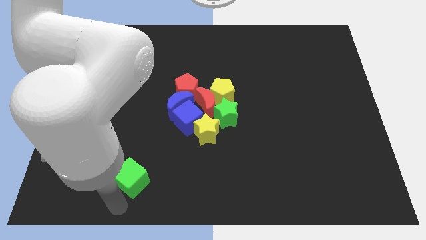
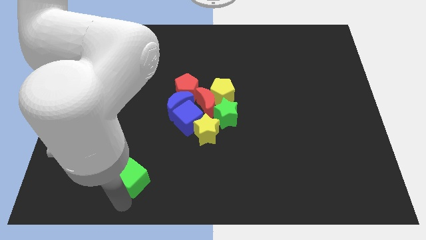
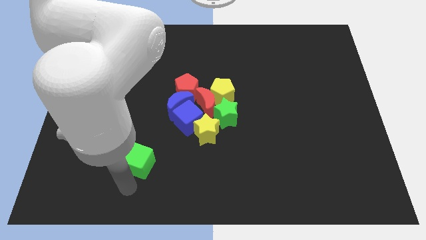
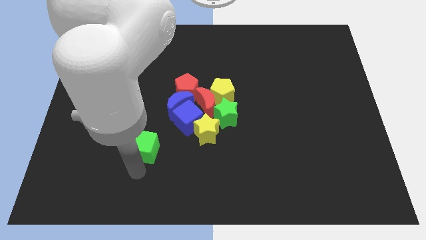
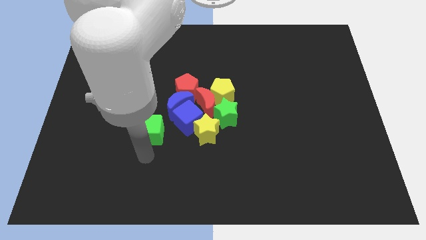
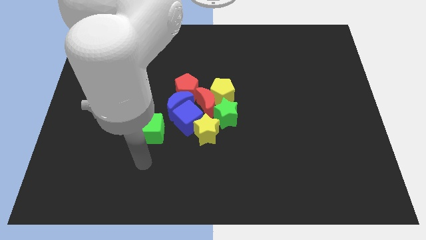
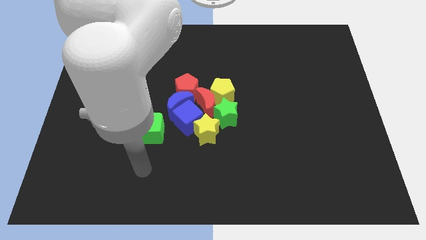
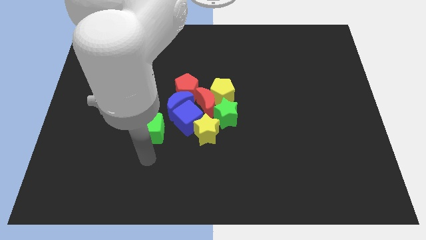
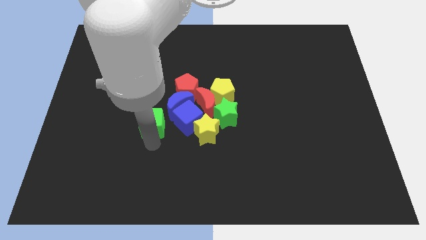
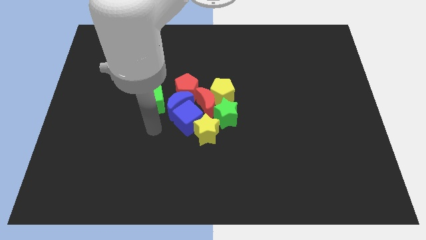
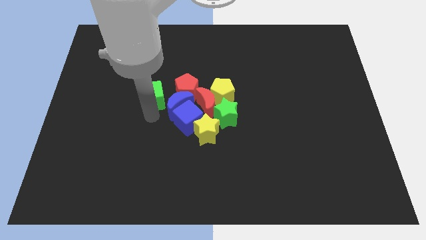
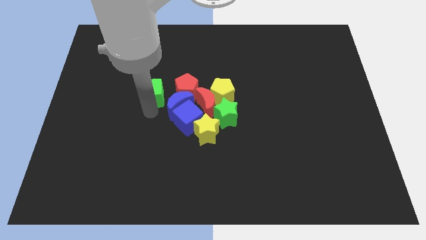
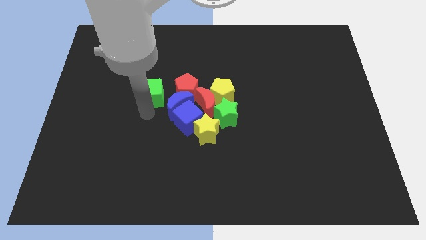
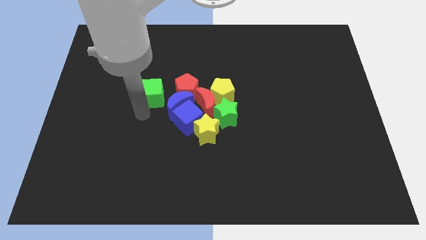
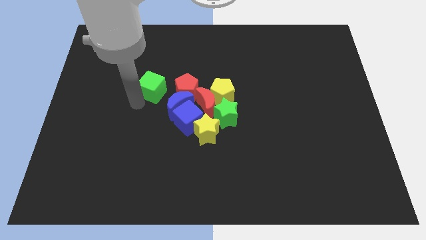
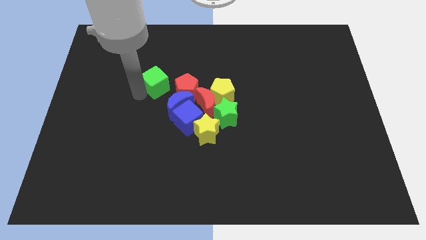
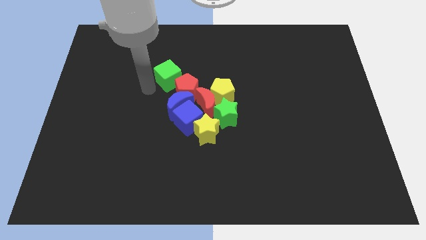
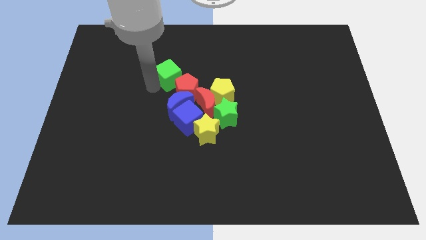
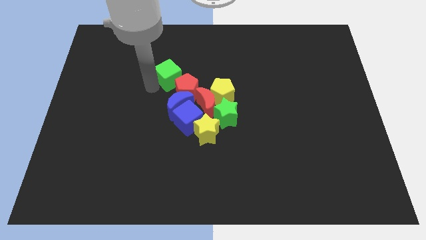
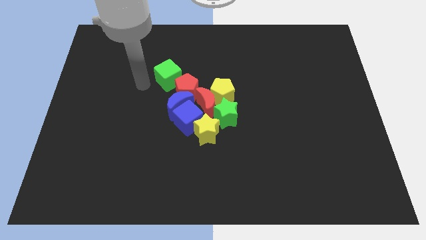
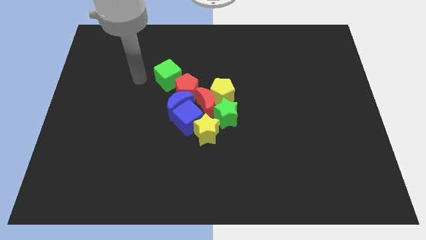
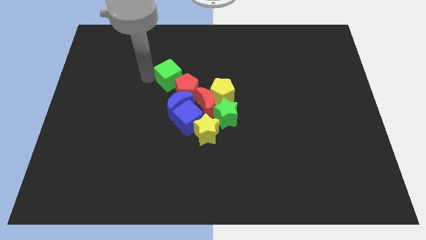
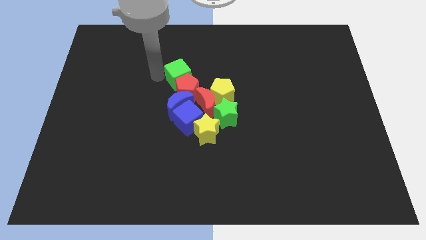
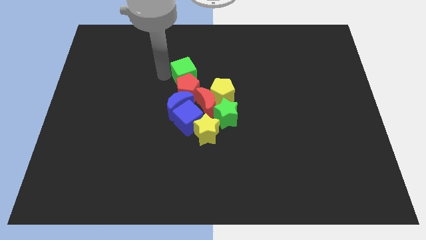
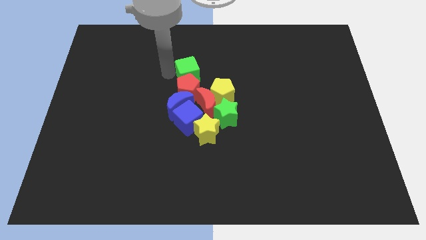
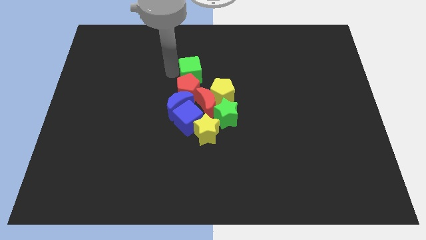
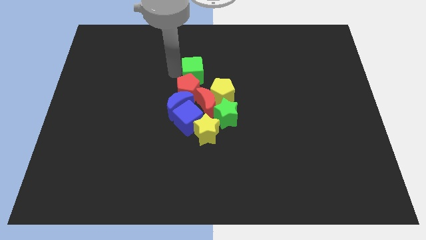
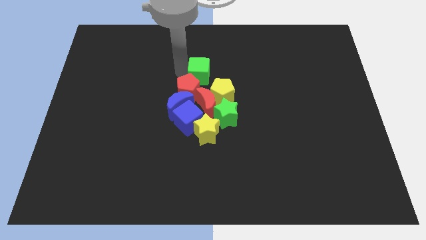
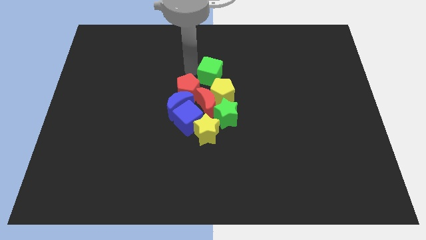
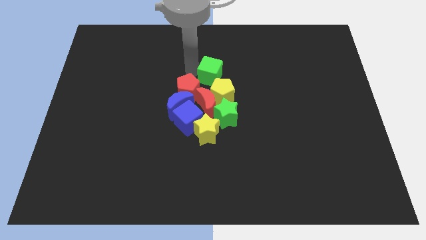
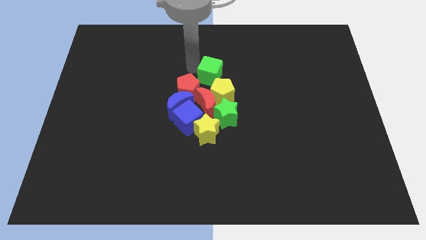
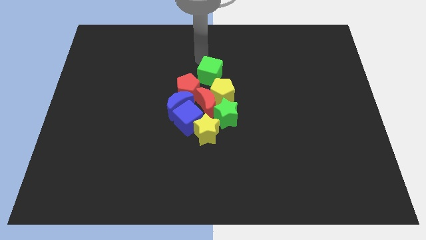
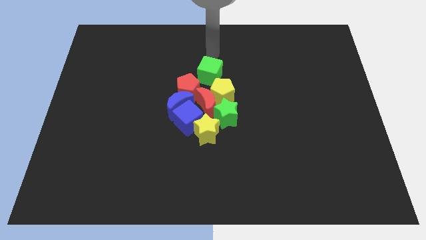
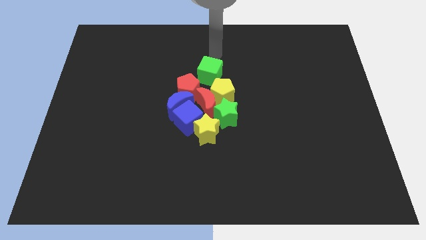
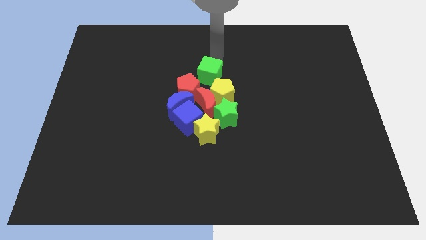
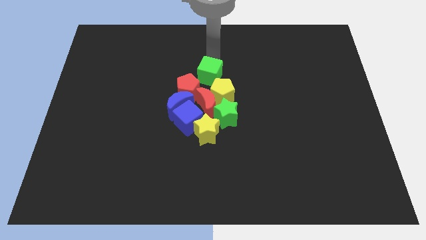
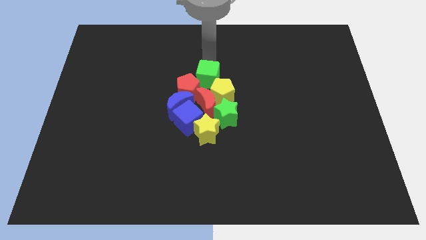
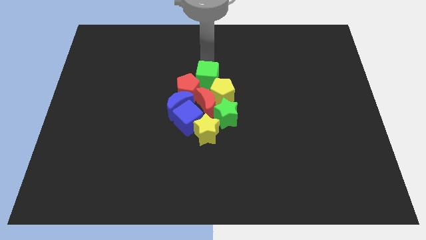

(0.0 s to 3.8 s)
move green cube right above the red pentagon

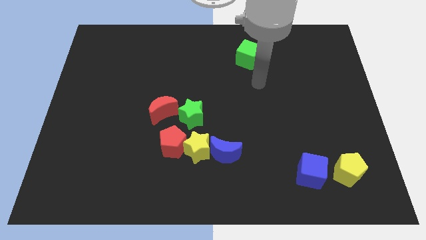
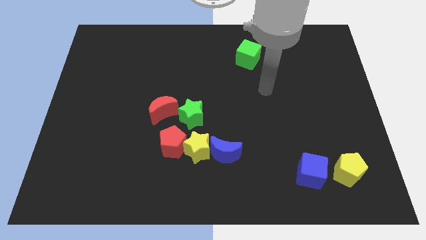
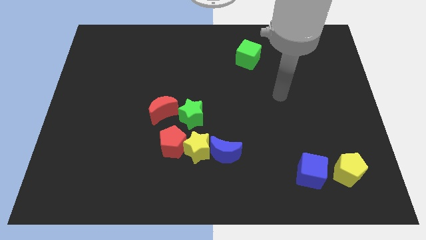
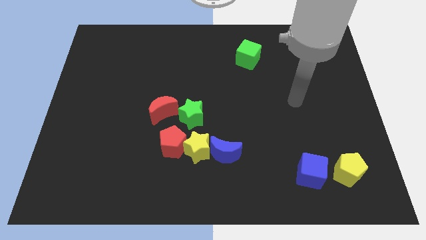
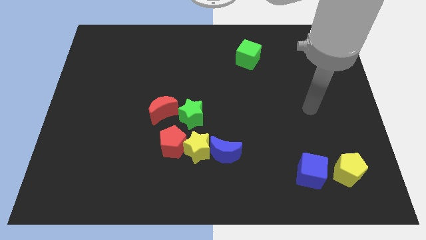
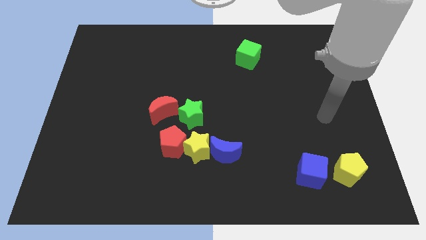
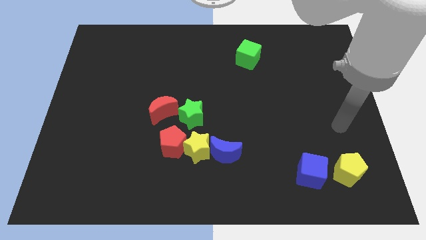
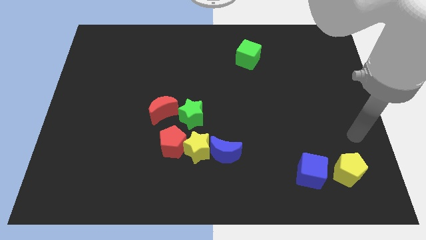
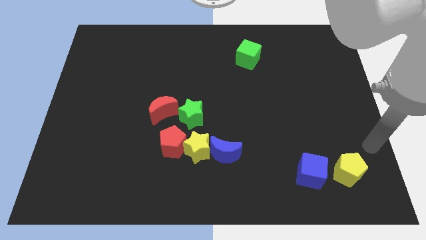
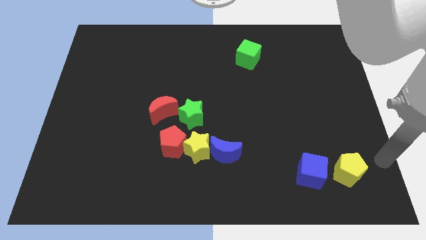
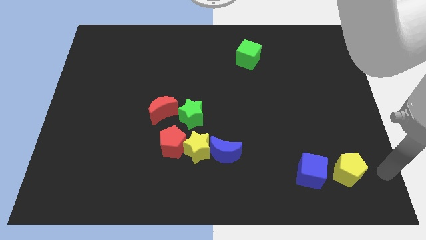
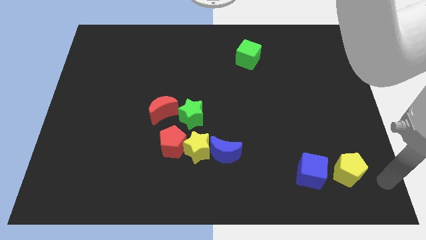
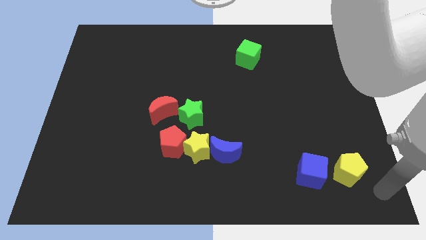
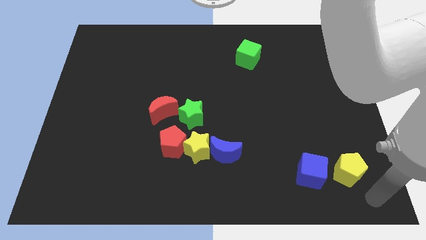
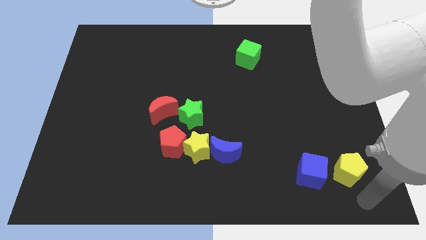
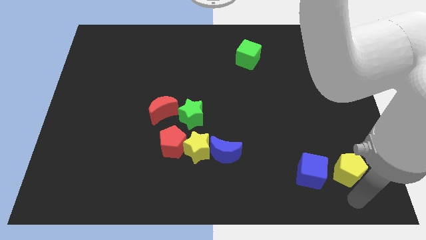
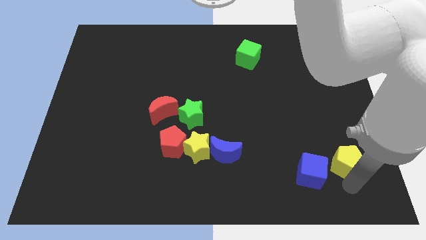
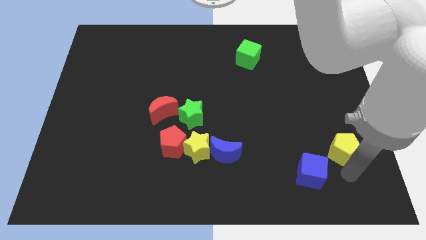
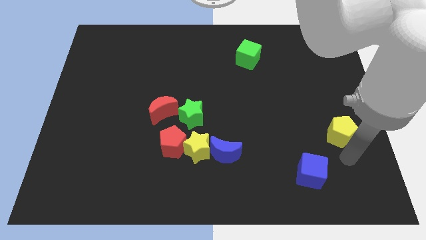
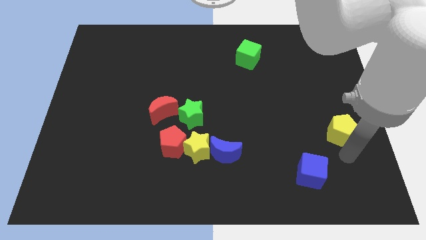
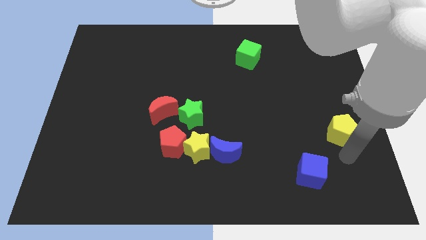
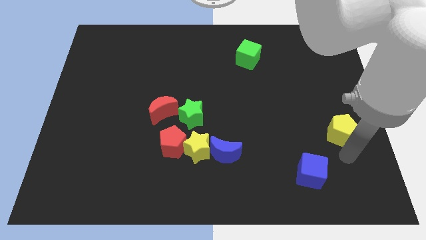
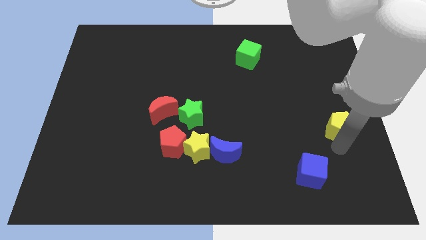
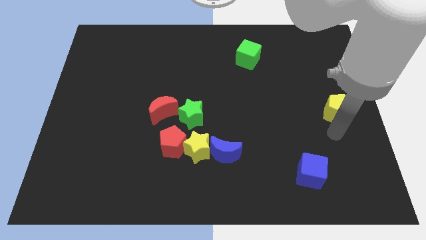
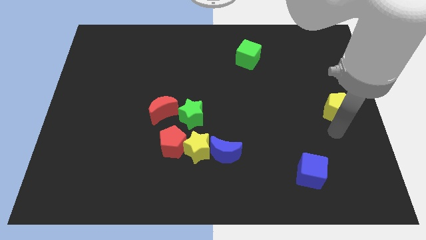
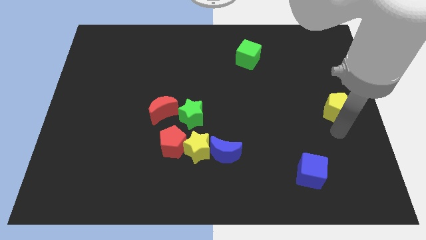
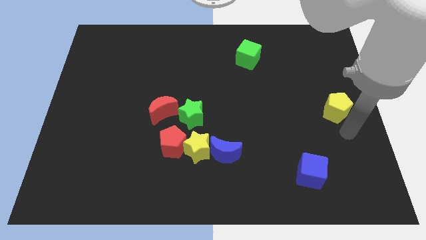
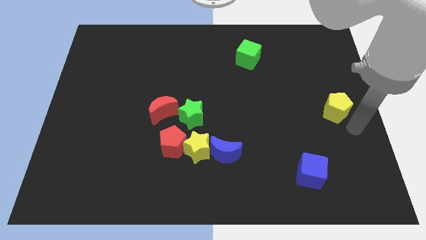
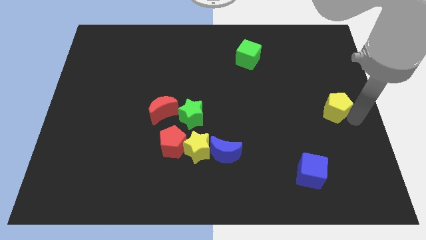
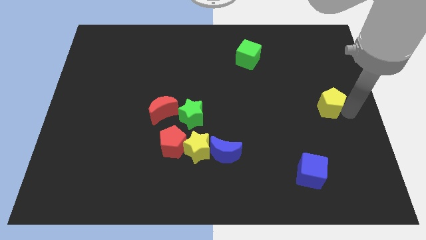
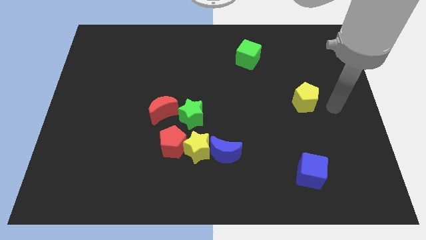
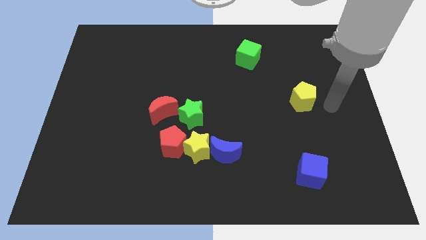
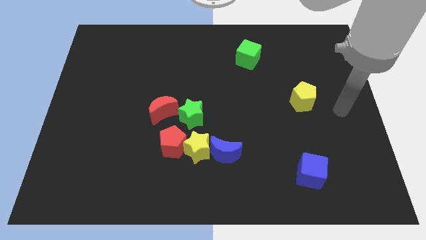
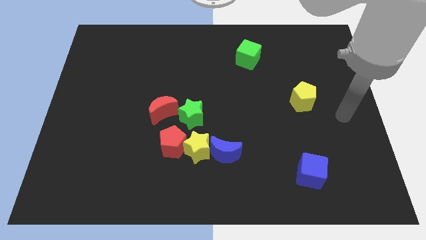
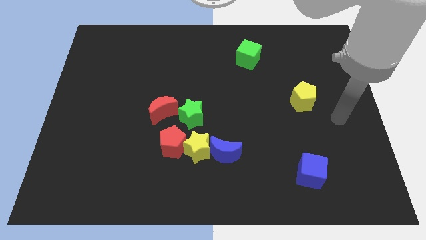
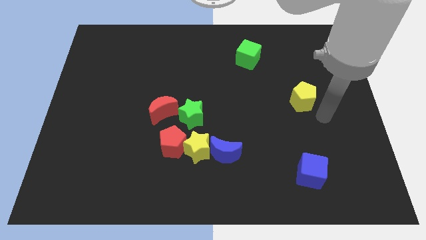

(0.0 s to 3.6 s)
move yellow pentagon to the top of blue cube

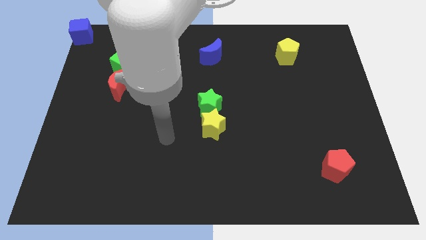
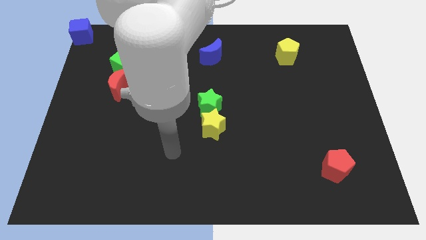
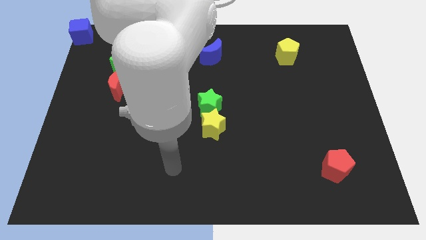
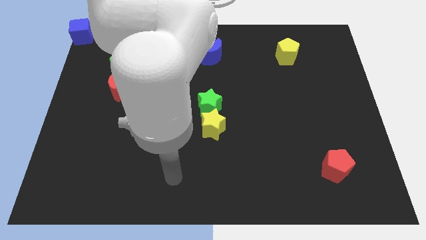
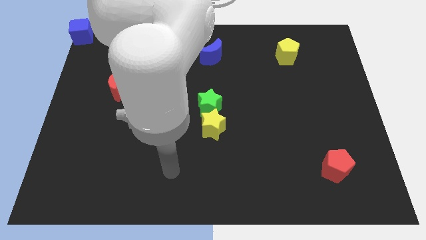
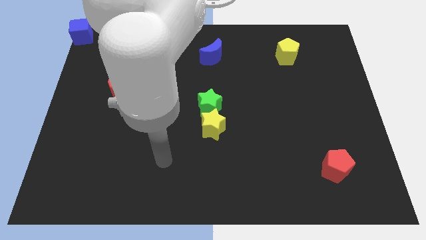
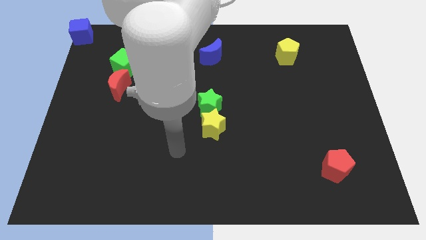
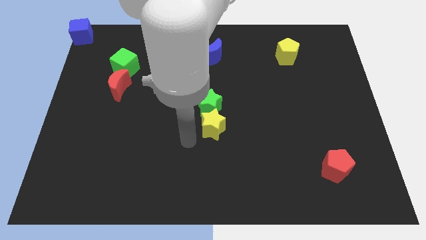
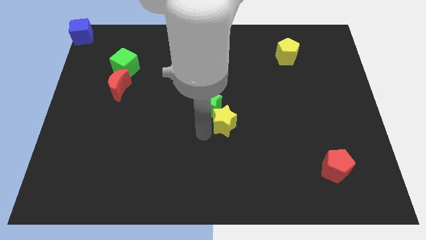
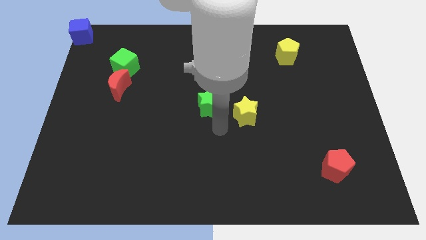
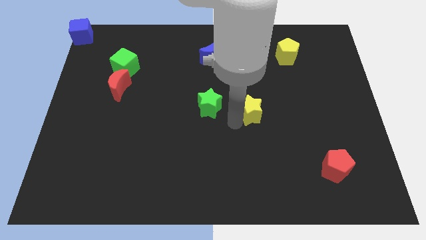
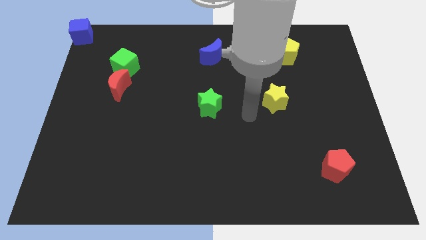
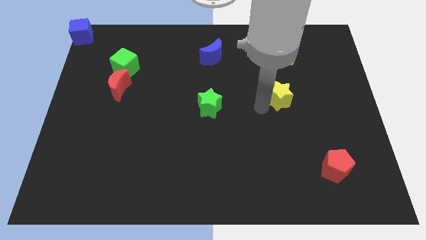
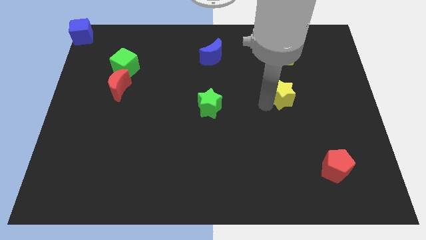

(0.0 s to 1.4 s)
push yellow star diagonally towards red pentagon

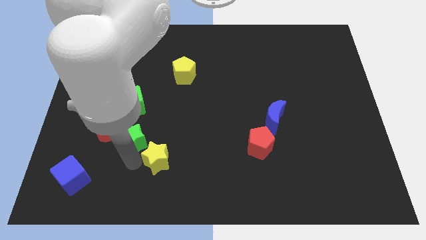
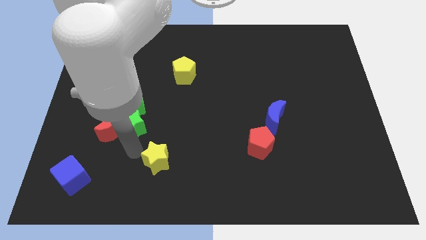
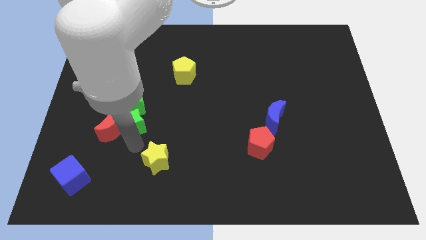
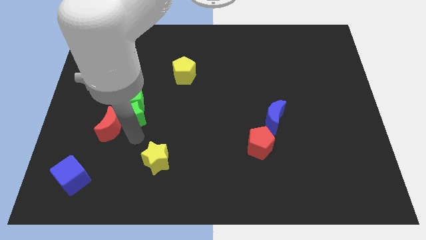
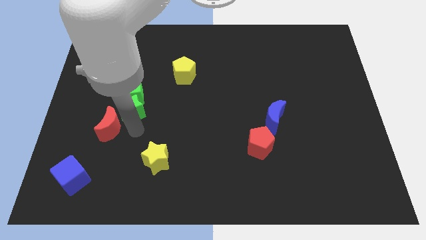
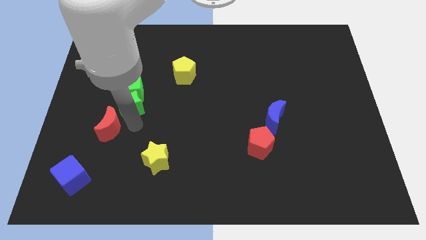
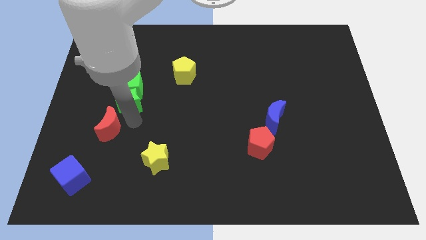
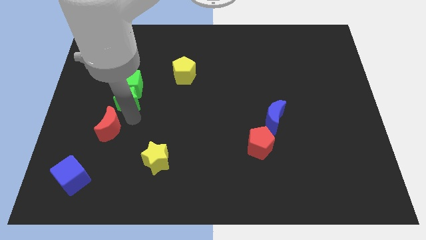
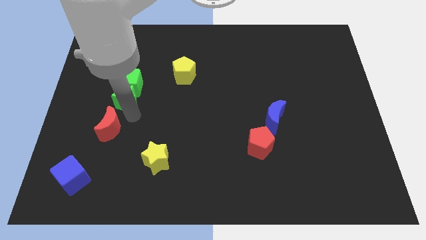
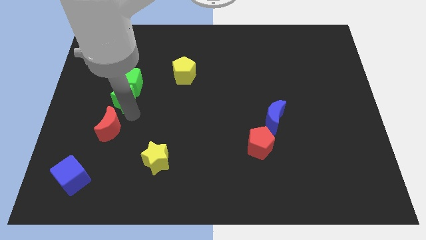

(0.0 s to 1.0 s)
push the green cube with the help of green star towards top
